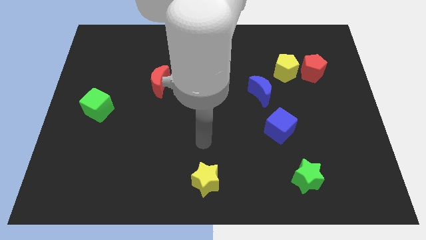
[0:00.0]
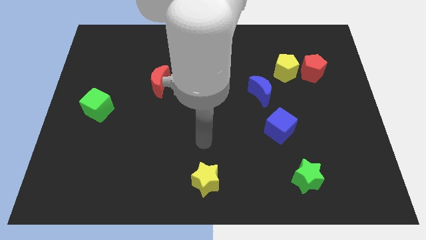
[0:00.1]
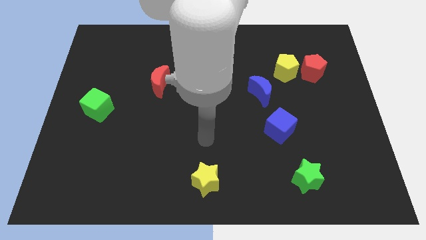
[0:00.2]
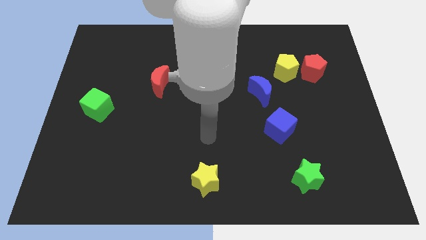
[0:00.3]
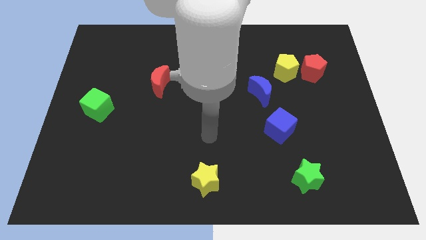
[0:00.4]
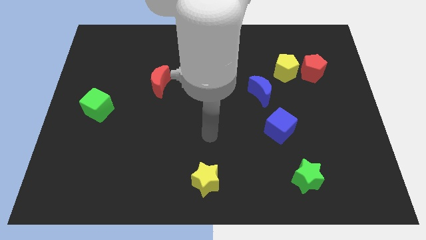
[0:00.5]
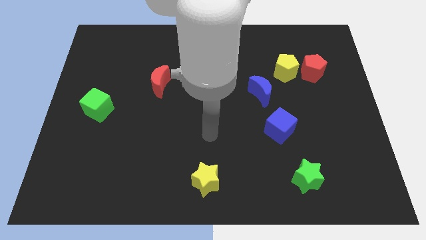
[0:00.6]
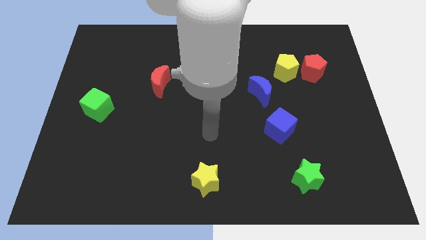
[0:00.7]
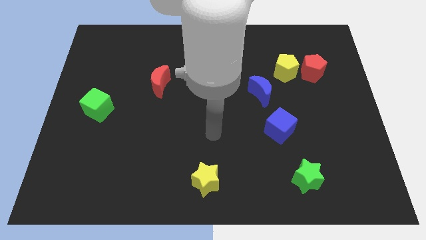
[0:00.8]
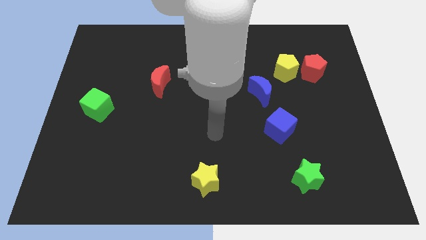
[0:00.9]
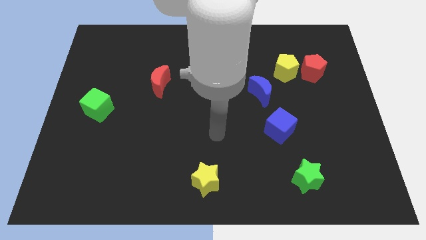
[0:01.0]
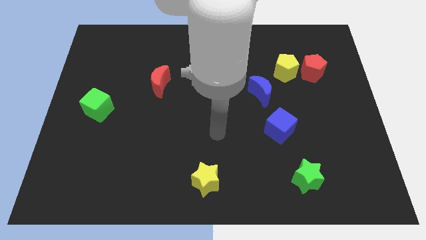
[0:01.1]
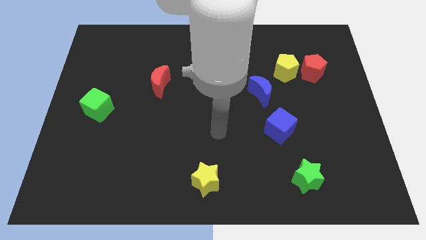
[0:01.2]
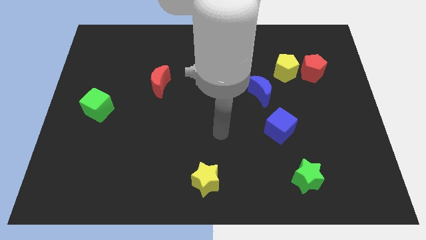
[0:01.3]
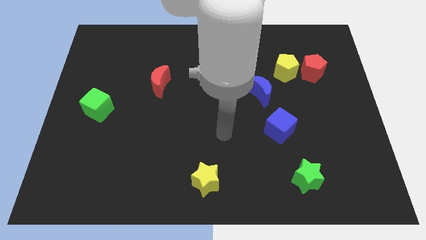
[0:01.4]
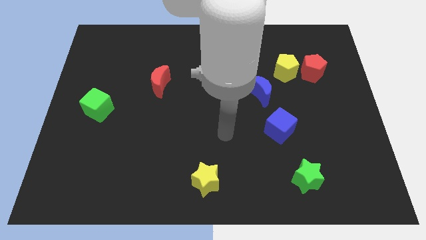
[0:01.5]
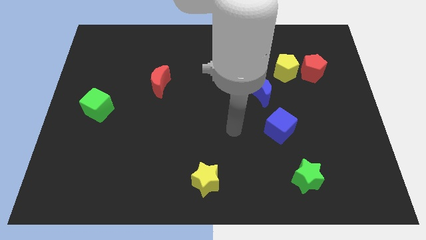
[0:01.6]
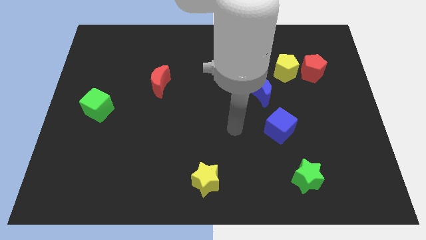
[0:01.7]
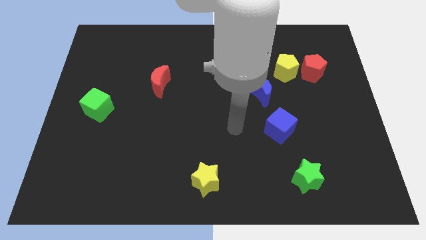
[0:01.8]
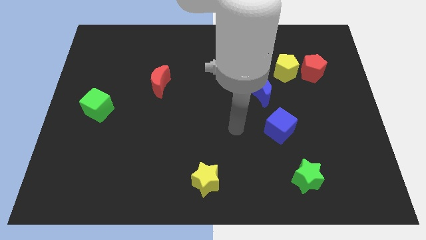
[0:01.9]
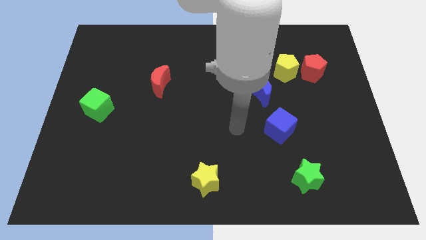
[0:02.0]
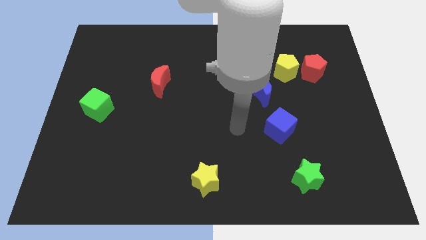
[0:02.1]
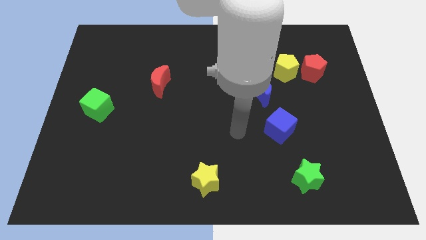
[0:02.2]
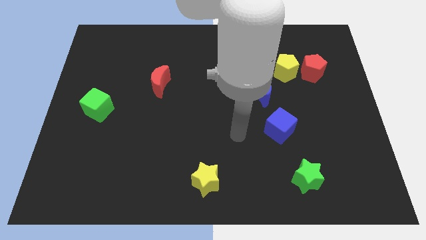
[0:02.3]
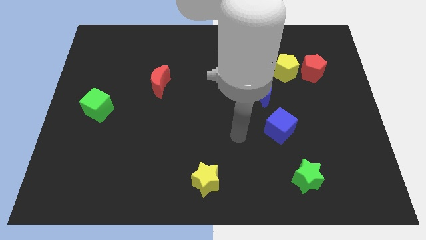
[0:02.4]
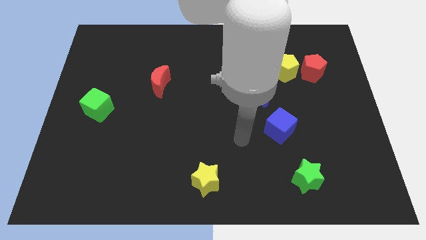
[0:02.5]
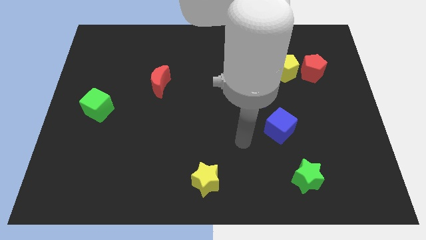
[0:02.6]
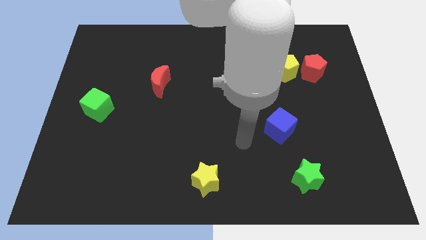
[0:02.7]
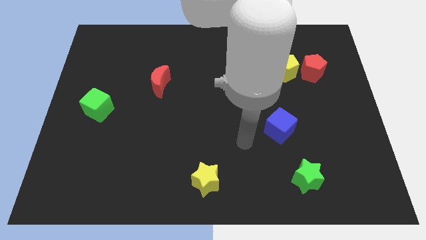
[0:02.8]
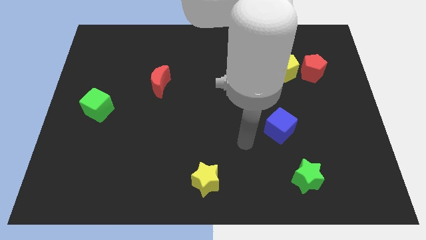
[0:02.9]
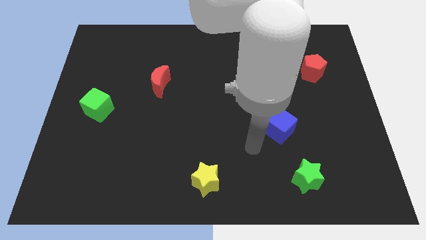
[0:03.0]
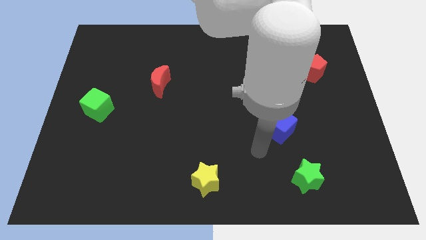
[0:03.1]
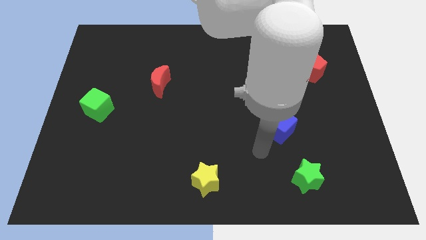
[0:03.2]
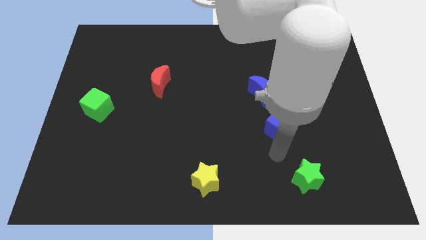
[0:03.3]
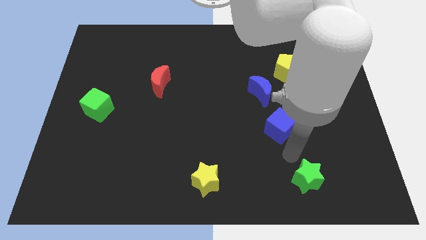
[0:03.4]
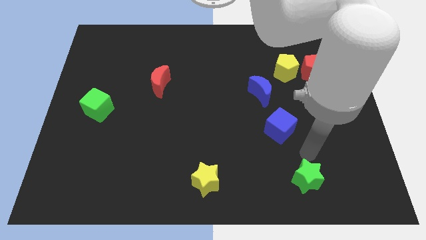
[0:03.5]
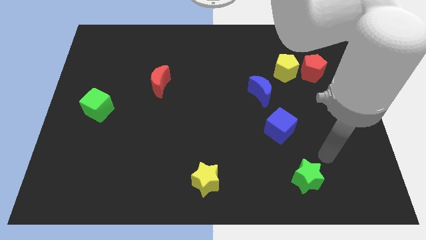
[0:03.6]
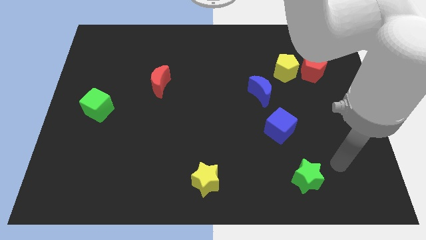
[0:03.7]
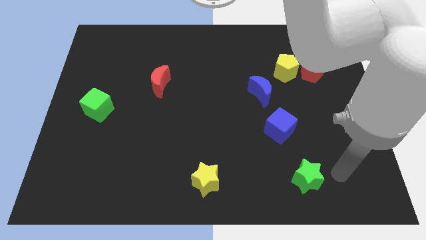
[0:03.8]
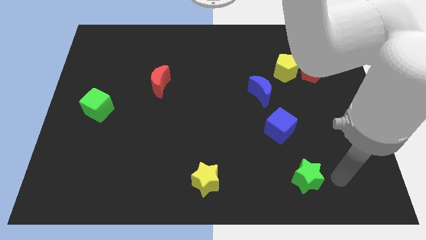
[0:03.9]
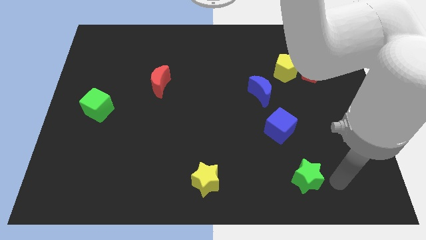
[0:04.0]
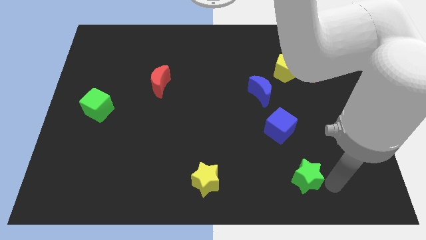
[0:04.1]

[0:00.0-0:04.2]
point the arm to the right of the green star

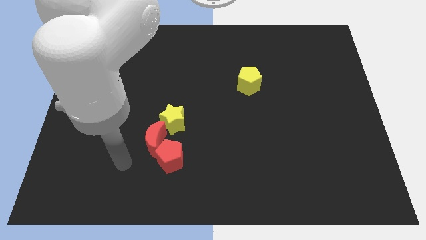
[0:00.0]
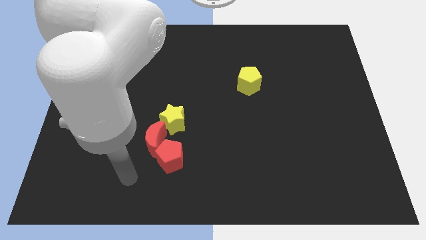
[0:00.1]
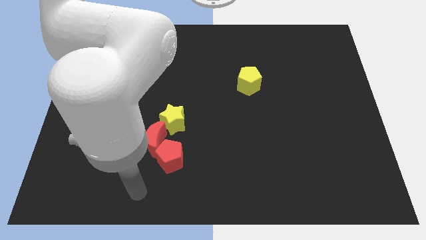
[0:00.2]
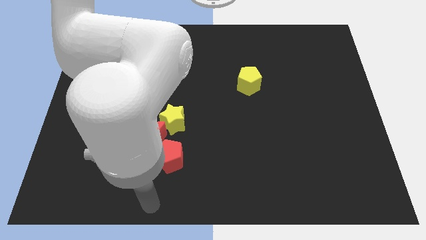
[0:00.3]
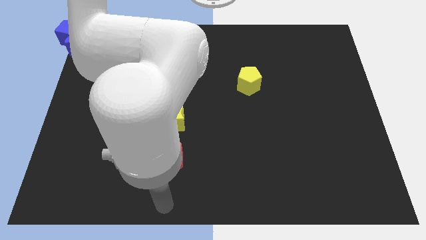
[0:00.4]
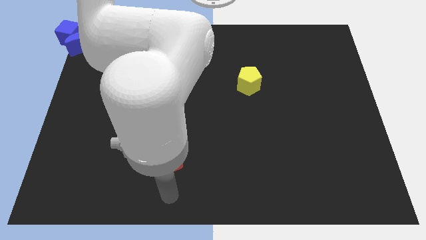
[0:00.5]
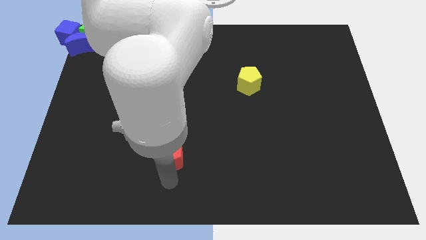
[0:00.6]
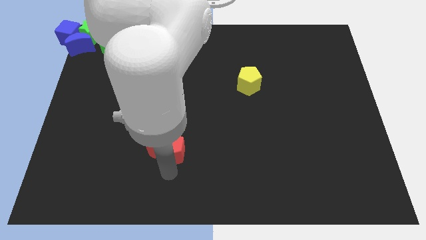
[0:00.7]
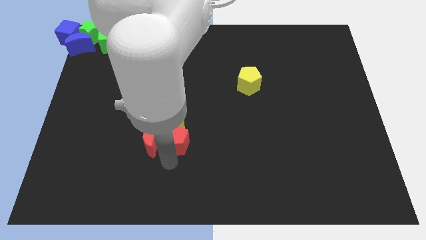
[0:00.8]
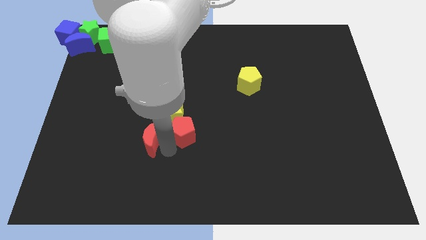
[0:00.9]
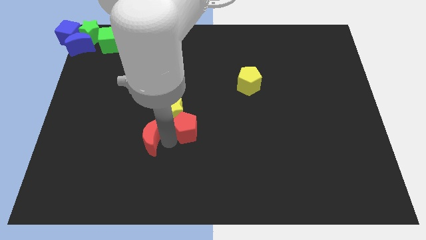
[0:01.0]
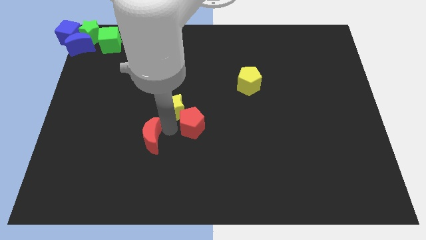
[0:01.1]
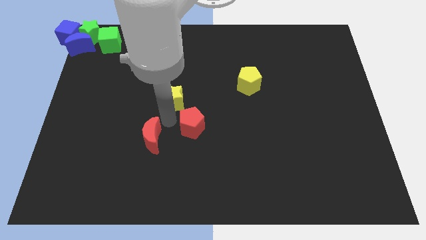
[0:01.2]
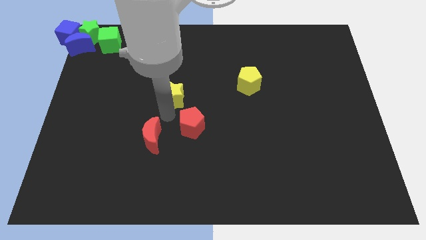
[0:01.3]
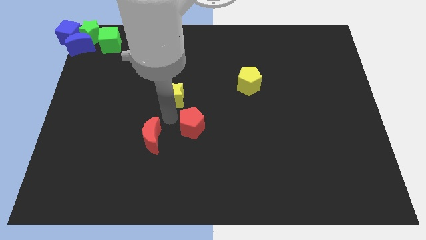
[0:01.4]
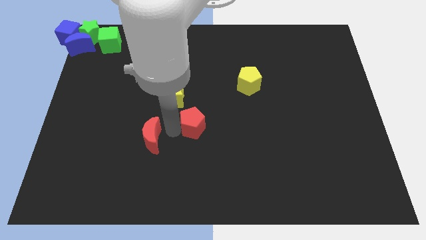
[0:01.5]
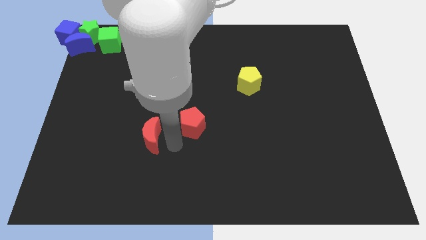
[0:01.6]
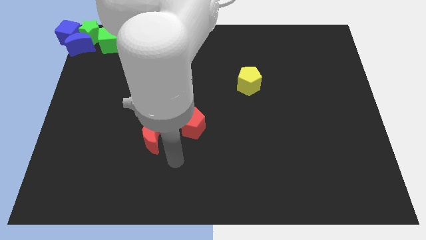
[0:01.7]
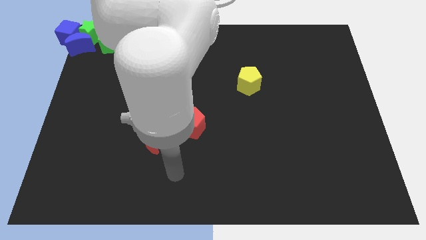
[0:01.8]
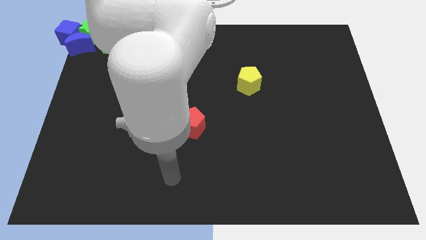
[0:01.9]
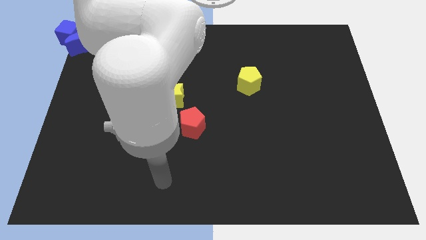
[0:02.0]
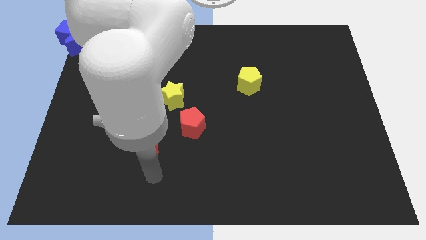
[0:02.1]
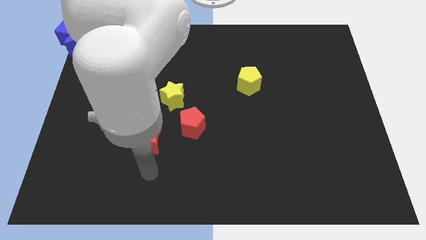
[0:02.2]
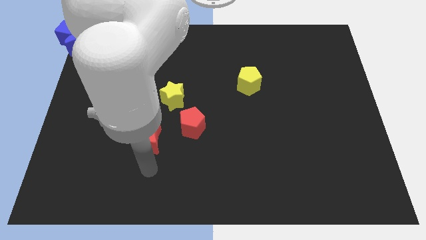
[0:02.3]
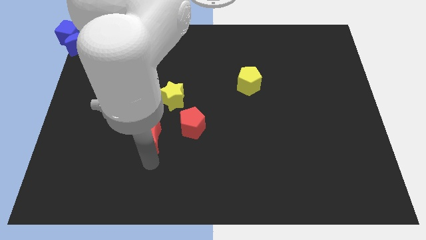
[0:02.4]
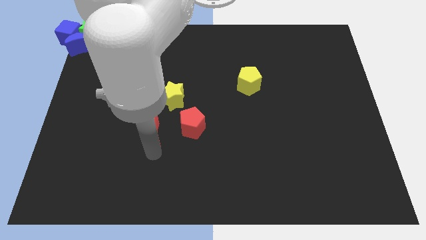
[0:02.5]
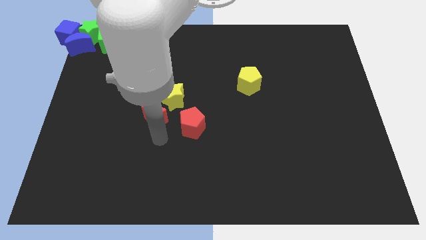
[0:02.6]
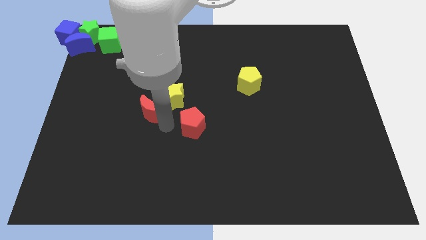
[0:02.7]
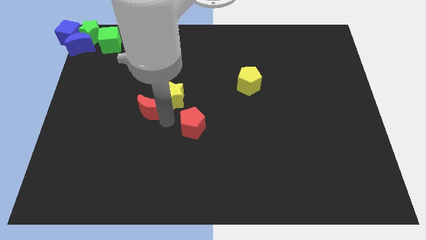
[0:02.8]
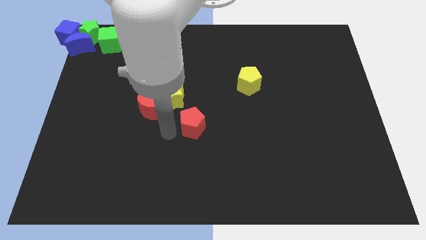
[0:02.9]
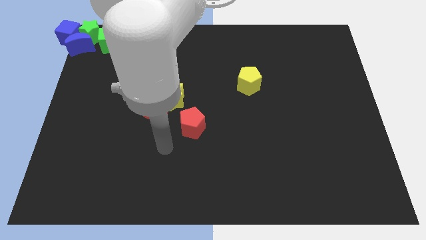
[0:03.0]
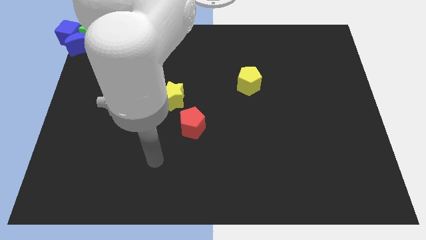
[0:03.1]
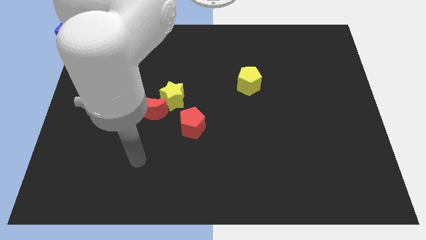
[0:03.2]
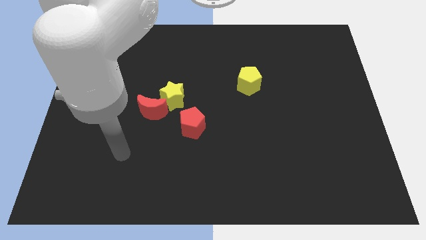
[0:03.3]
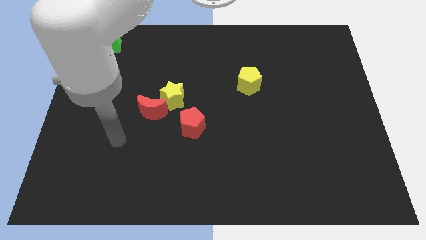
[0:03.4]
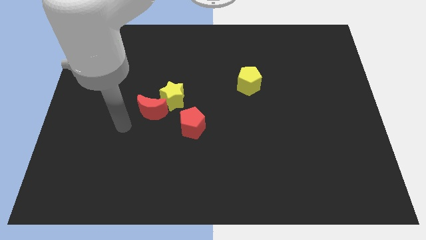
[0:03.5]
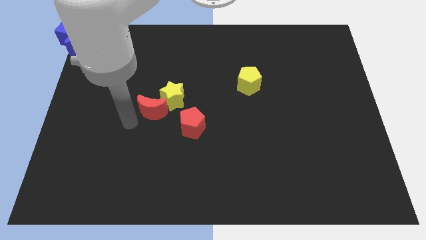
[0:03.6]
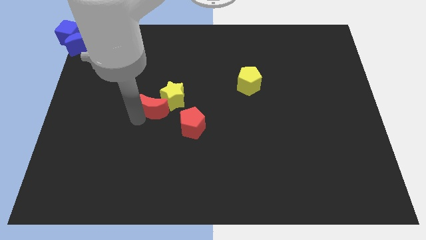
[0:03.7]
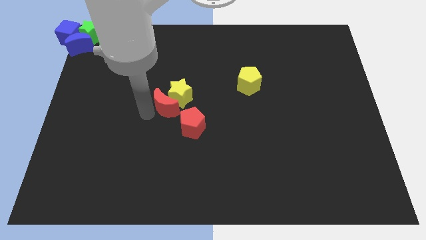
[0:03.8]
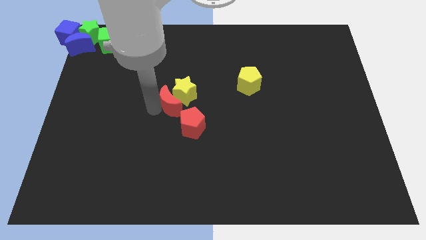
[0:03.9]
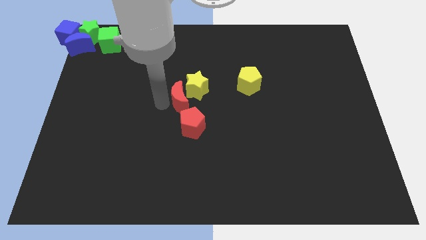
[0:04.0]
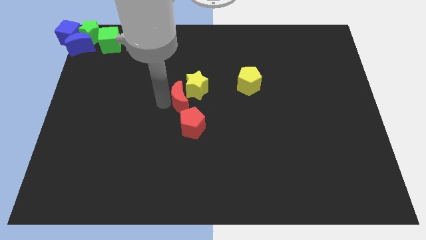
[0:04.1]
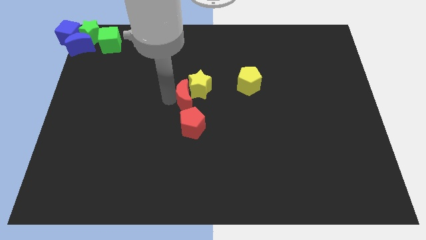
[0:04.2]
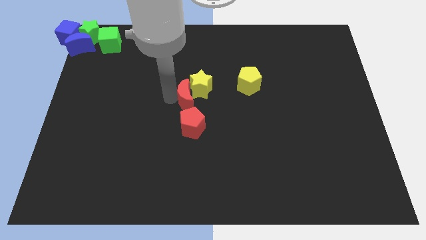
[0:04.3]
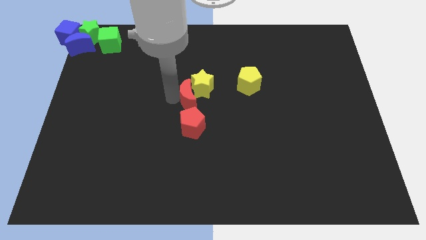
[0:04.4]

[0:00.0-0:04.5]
push the red pentagon towards the yellow star

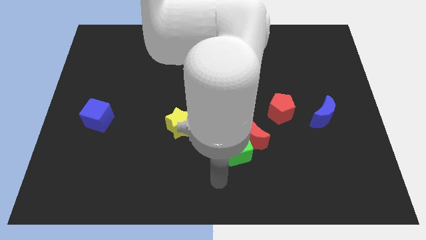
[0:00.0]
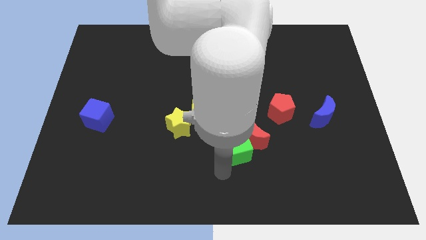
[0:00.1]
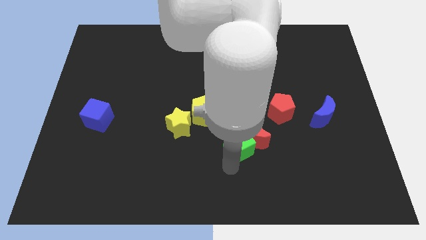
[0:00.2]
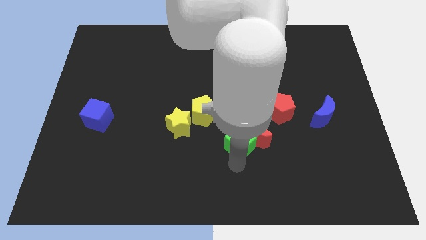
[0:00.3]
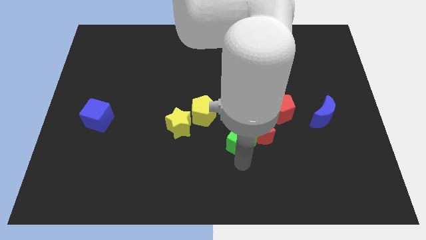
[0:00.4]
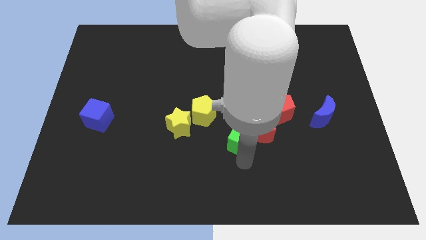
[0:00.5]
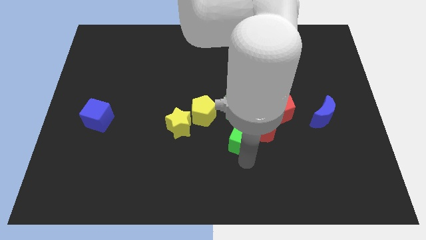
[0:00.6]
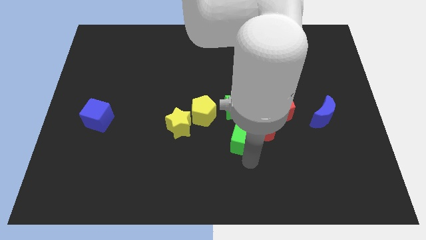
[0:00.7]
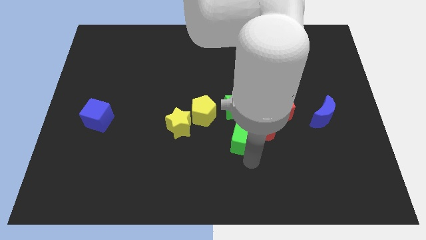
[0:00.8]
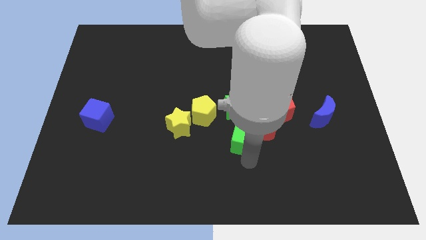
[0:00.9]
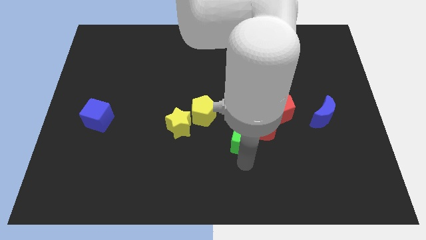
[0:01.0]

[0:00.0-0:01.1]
move the green cube into the red moon
